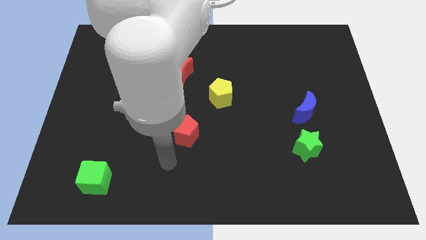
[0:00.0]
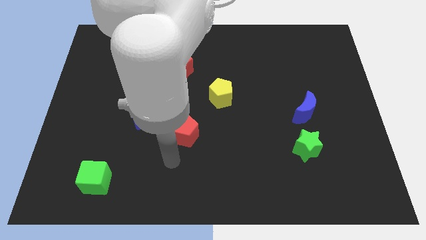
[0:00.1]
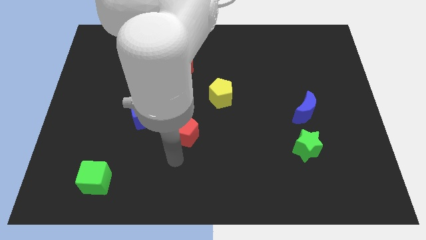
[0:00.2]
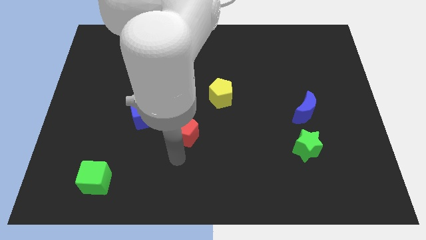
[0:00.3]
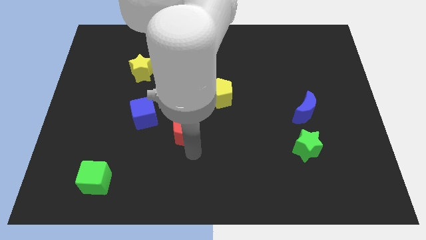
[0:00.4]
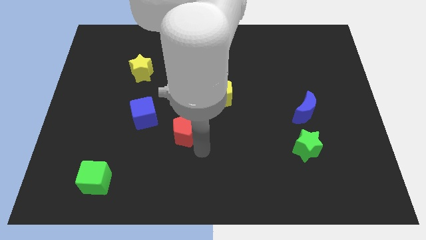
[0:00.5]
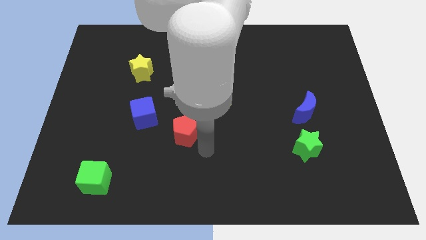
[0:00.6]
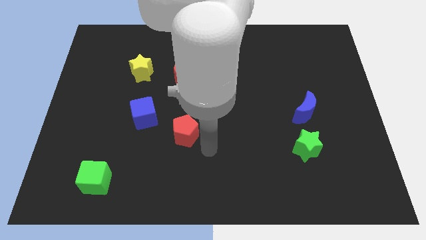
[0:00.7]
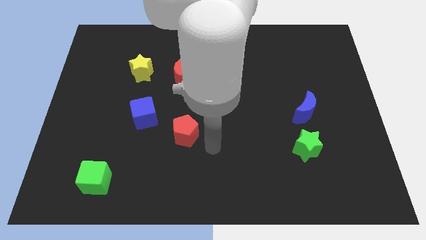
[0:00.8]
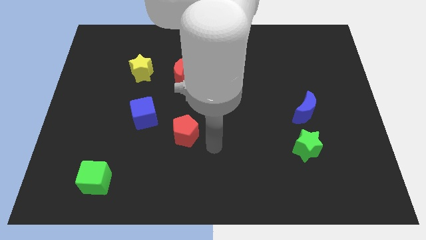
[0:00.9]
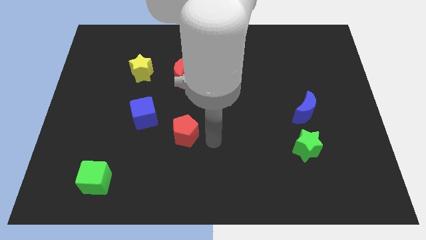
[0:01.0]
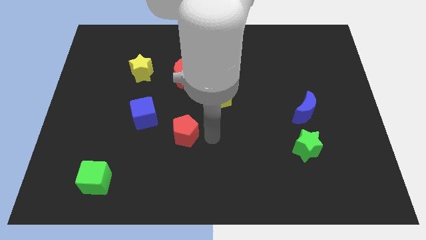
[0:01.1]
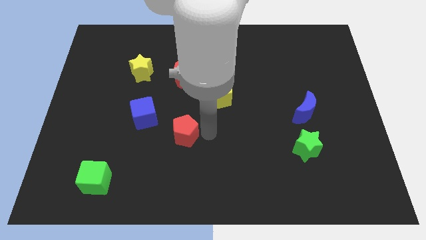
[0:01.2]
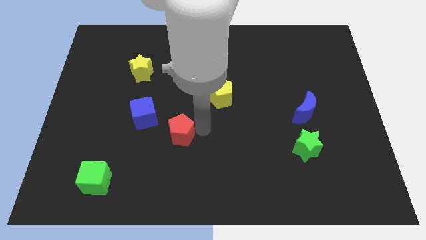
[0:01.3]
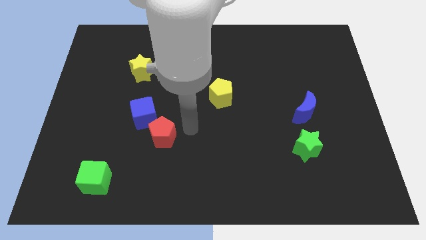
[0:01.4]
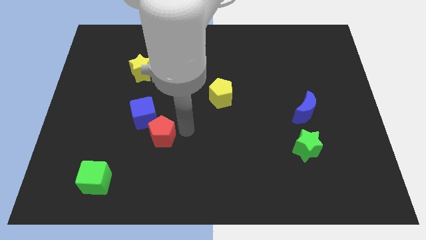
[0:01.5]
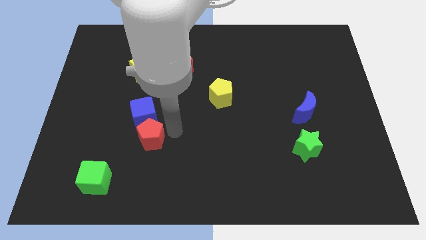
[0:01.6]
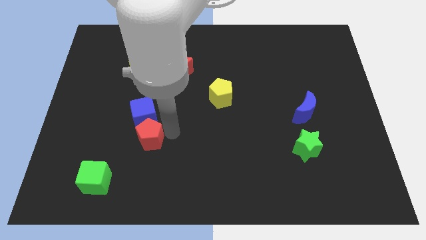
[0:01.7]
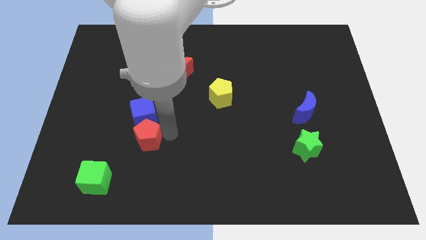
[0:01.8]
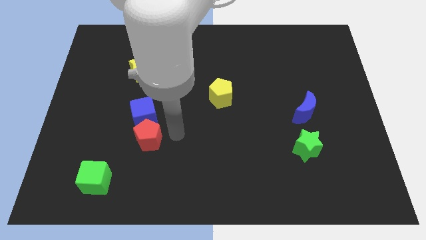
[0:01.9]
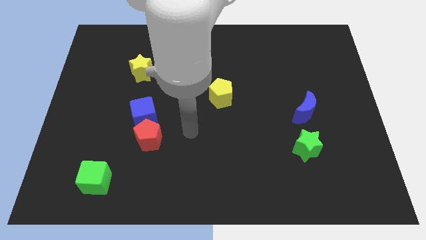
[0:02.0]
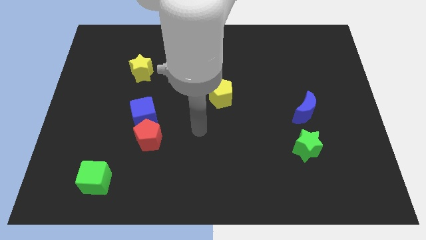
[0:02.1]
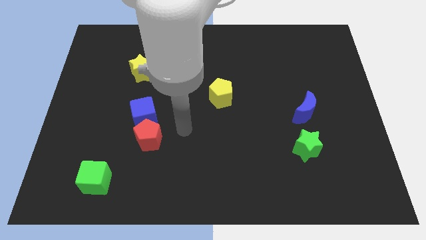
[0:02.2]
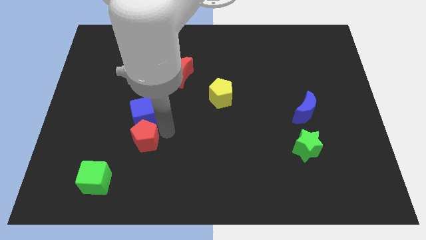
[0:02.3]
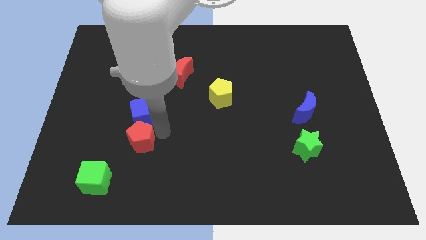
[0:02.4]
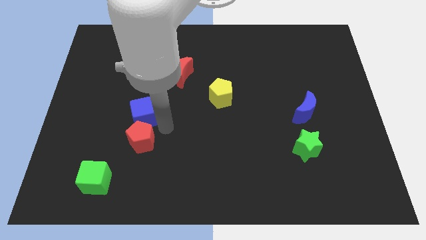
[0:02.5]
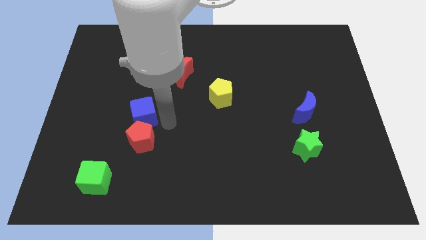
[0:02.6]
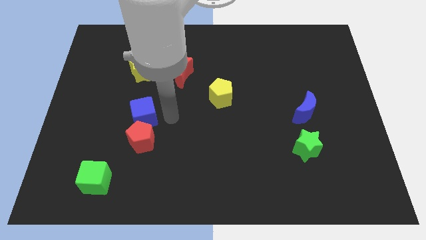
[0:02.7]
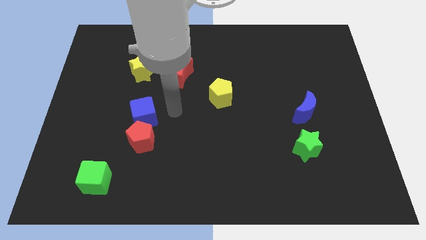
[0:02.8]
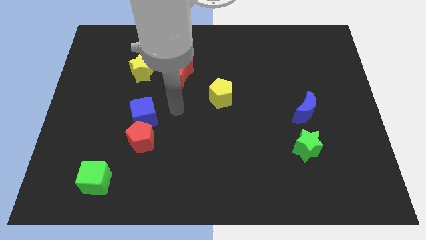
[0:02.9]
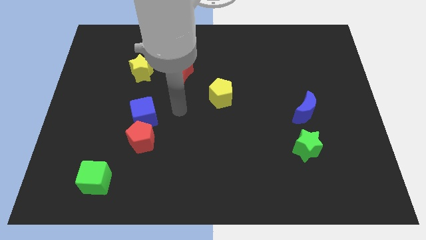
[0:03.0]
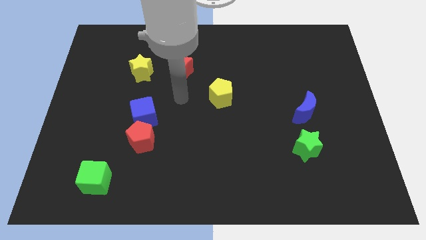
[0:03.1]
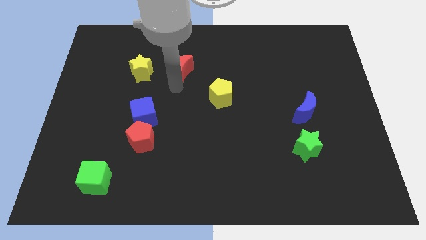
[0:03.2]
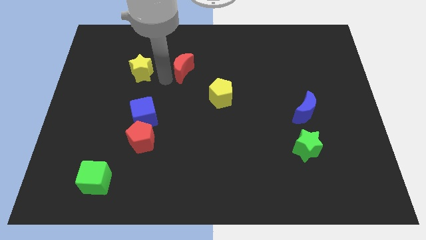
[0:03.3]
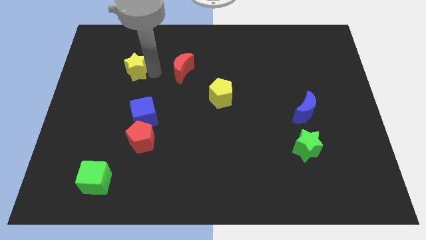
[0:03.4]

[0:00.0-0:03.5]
place the red pentagon below the blue cube

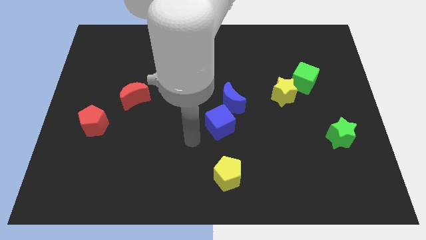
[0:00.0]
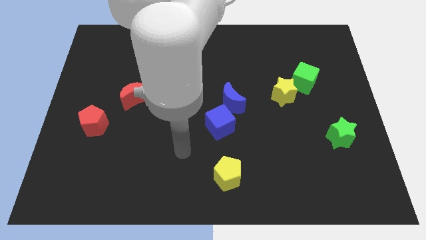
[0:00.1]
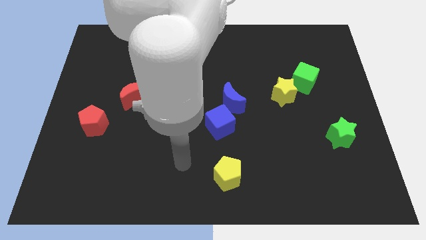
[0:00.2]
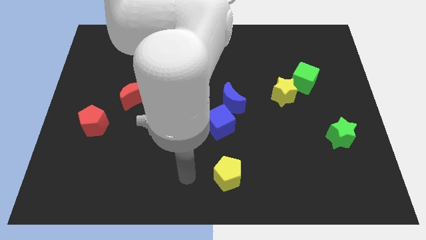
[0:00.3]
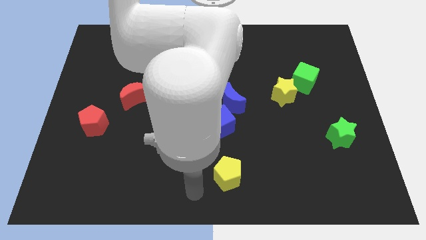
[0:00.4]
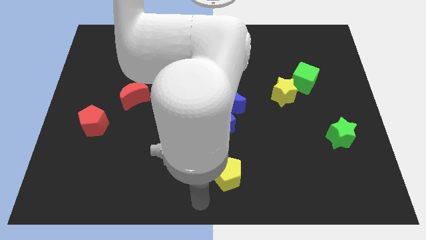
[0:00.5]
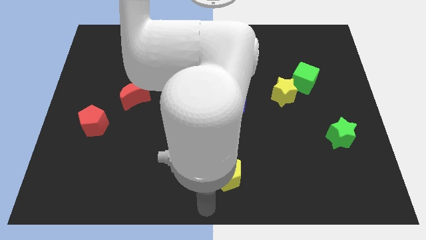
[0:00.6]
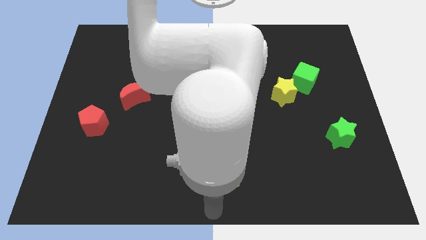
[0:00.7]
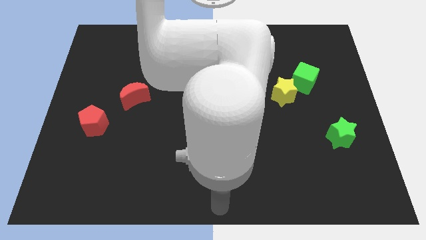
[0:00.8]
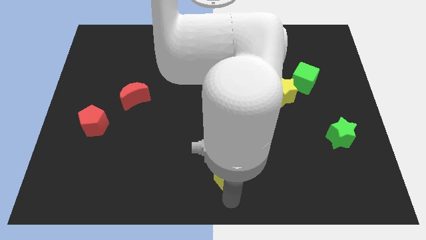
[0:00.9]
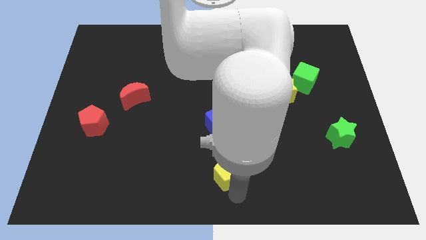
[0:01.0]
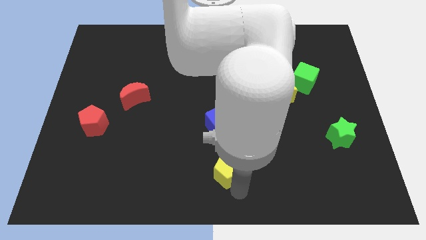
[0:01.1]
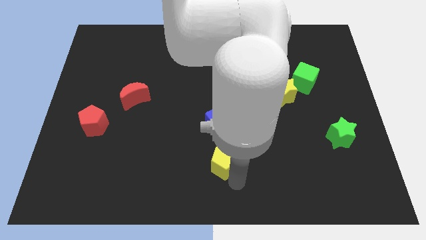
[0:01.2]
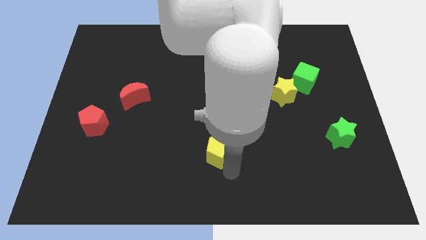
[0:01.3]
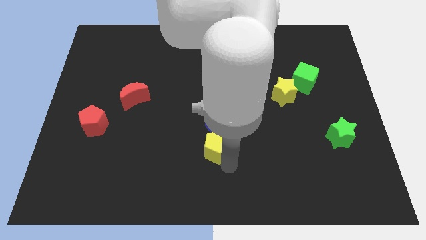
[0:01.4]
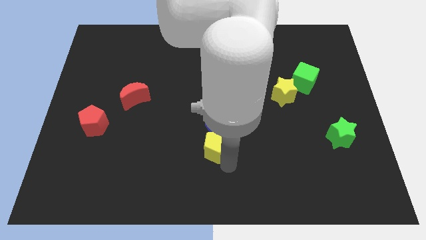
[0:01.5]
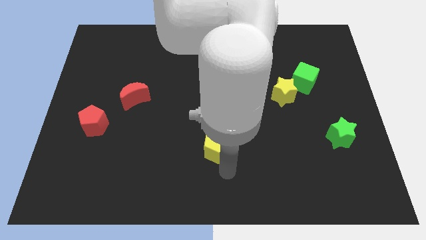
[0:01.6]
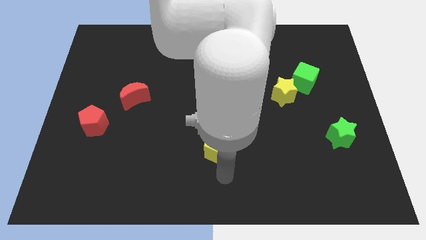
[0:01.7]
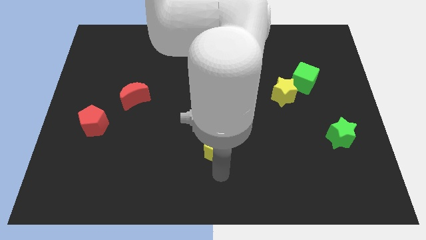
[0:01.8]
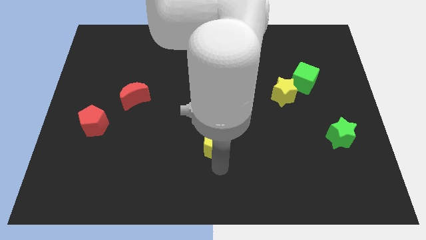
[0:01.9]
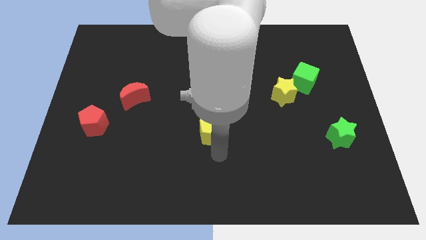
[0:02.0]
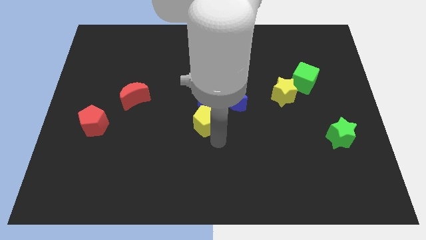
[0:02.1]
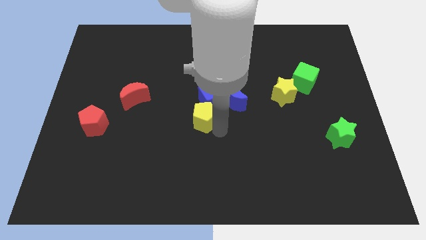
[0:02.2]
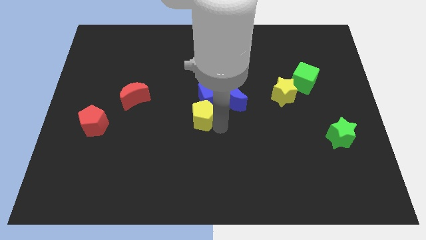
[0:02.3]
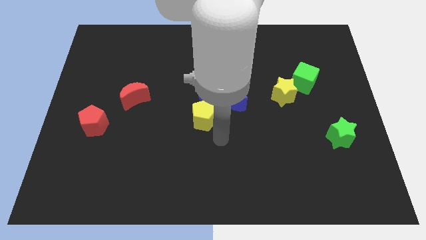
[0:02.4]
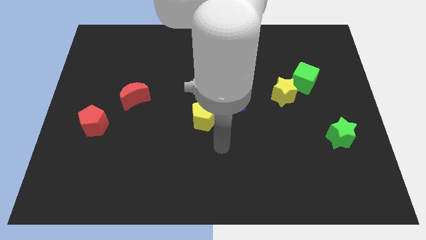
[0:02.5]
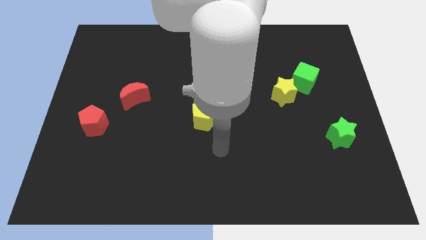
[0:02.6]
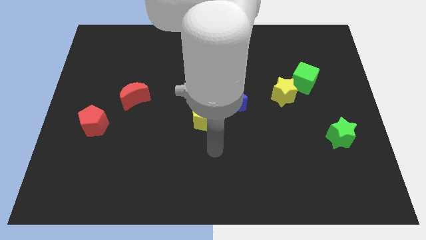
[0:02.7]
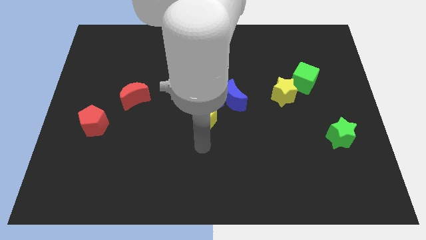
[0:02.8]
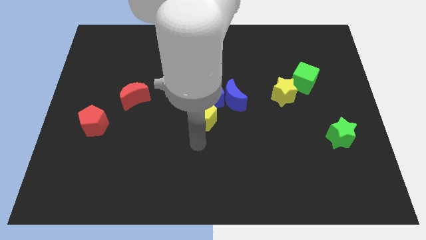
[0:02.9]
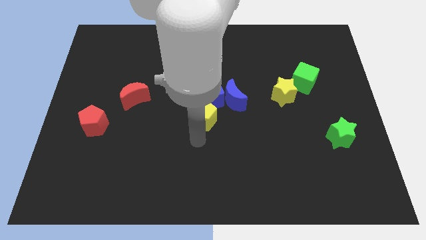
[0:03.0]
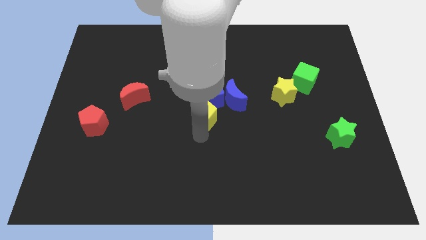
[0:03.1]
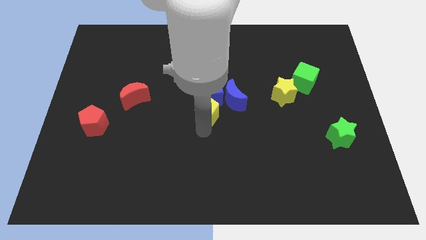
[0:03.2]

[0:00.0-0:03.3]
move the yellow pentagon into the blue blocks

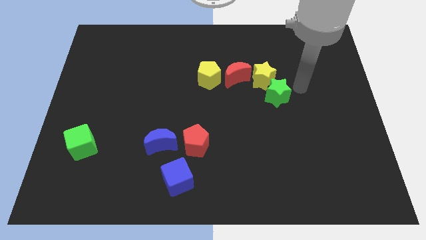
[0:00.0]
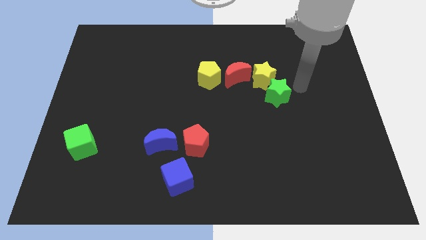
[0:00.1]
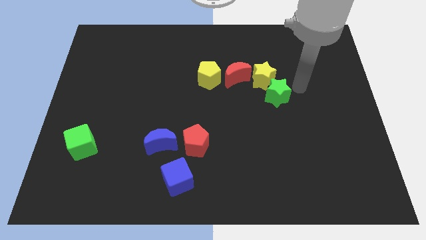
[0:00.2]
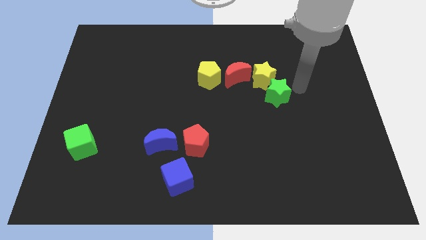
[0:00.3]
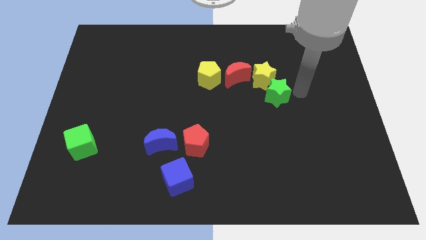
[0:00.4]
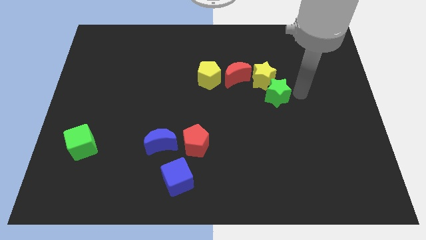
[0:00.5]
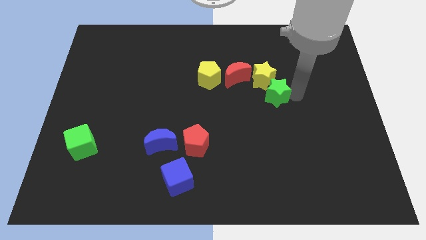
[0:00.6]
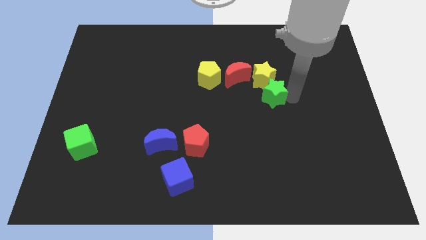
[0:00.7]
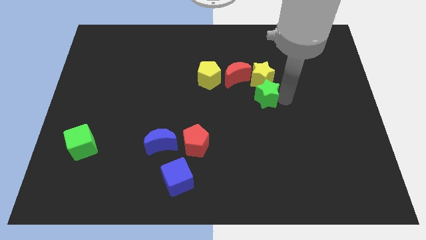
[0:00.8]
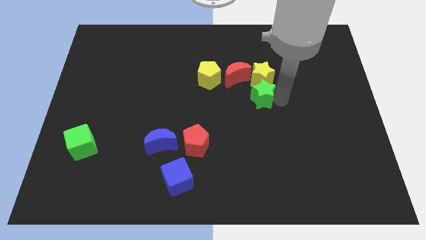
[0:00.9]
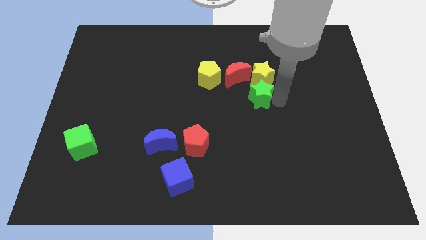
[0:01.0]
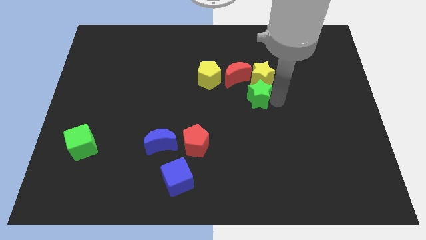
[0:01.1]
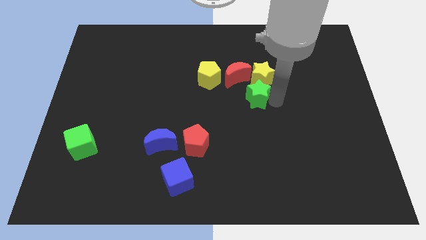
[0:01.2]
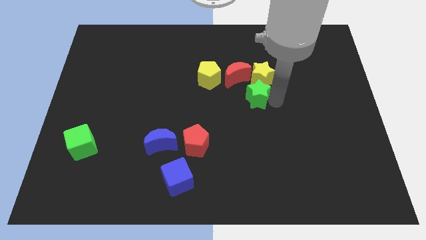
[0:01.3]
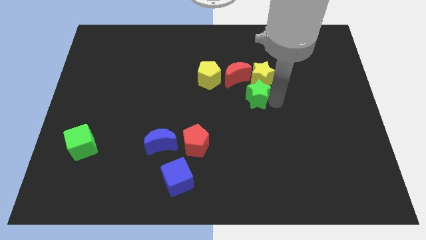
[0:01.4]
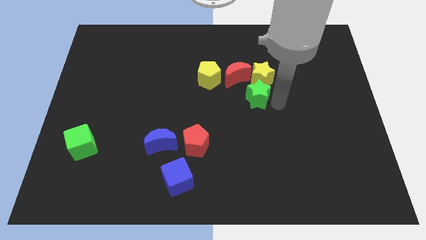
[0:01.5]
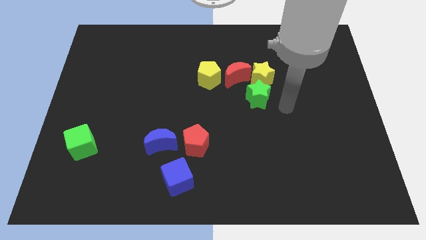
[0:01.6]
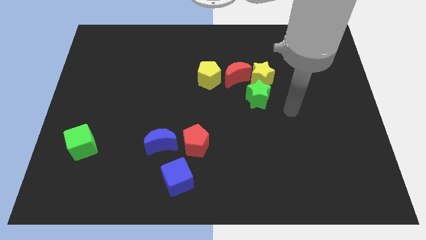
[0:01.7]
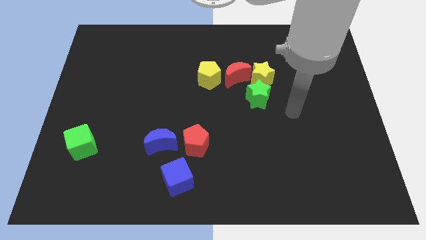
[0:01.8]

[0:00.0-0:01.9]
place the green star below the yellow star
